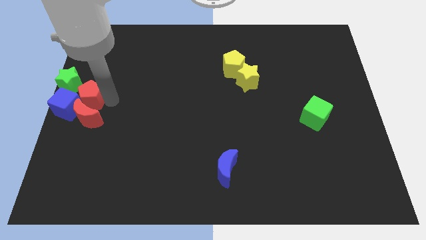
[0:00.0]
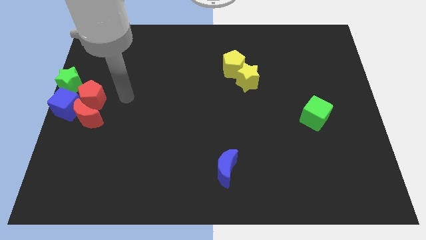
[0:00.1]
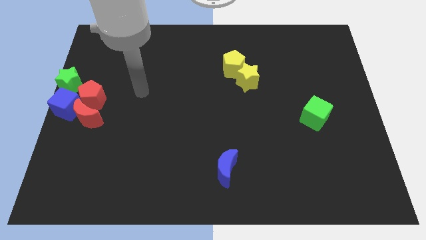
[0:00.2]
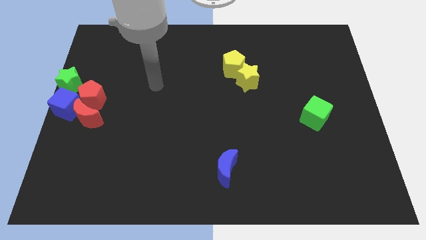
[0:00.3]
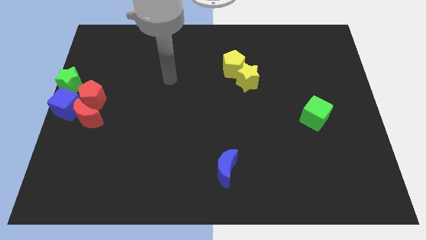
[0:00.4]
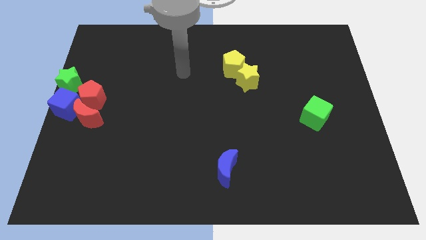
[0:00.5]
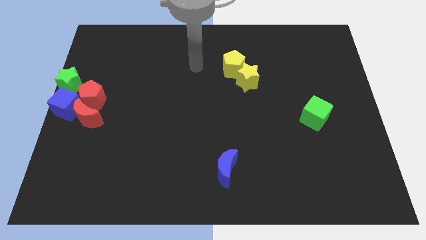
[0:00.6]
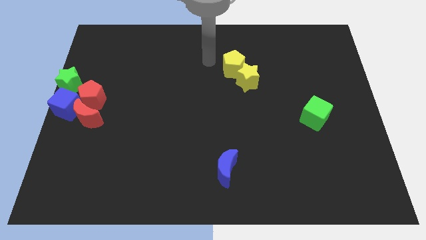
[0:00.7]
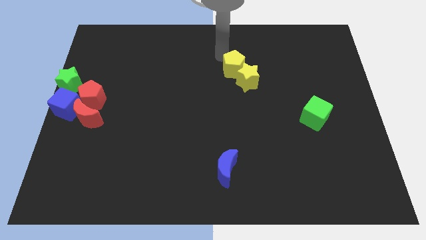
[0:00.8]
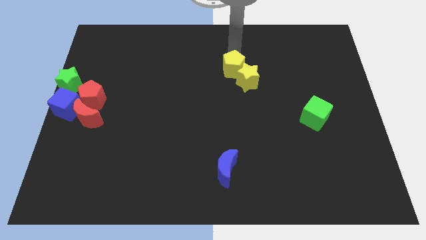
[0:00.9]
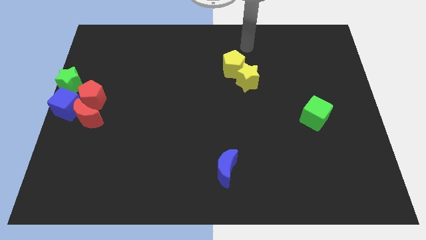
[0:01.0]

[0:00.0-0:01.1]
place your arm to the top of yellow pentagon

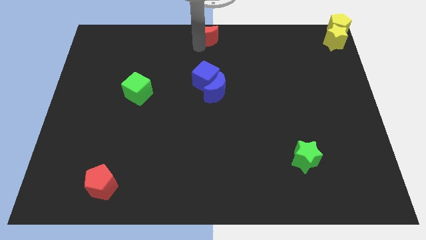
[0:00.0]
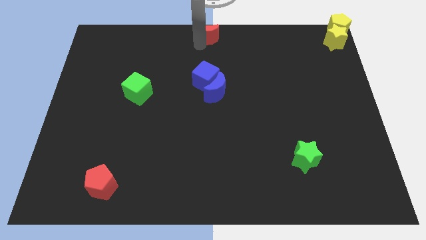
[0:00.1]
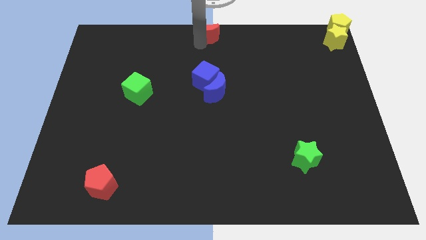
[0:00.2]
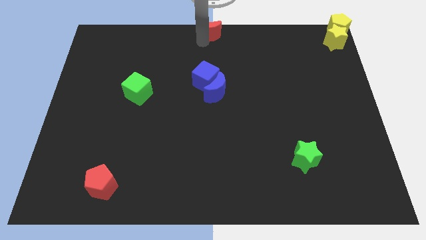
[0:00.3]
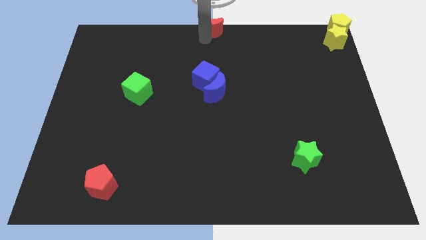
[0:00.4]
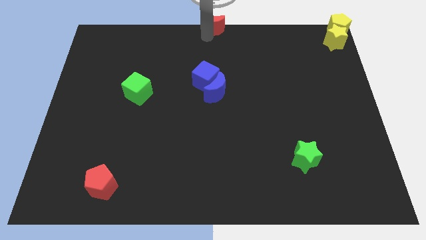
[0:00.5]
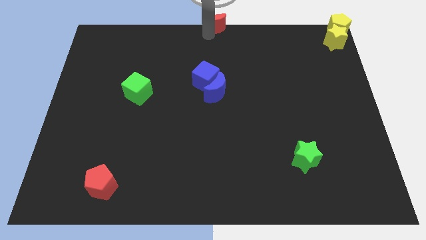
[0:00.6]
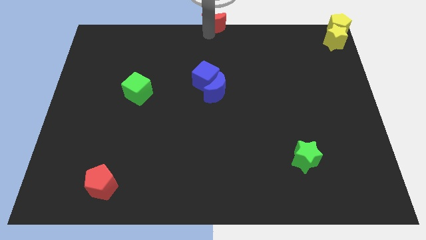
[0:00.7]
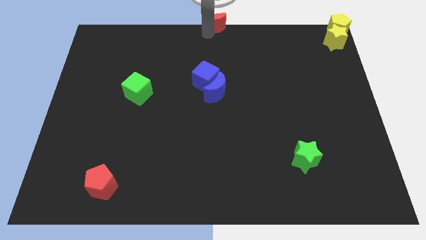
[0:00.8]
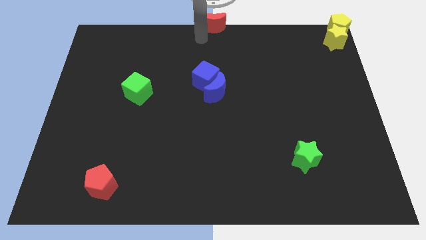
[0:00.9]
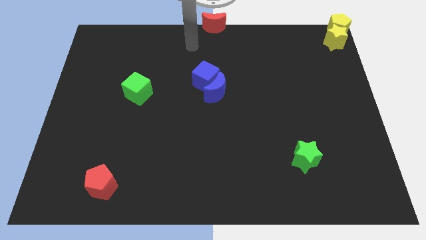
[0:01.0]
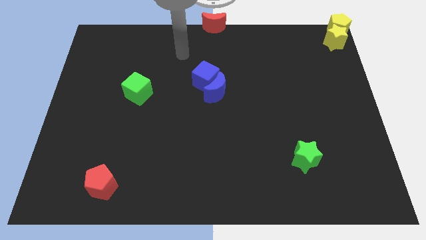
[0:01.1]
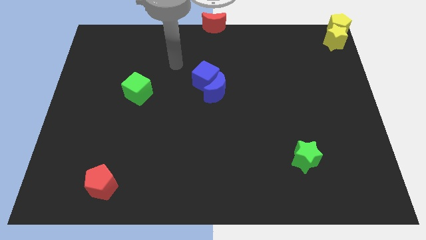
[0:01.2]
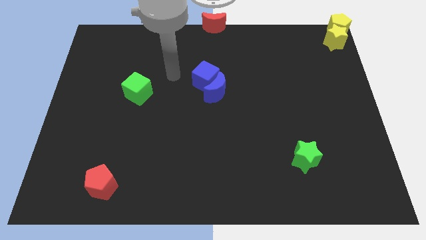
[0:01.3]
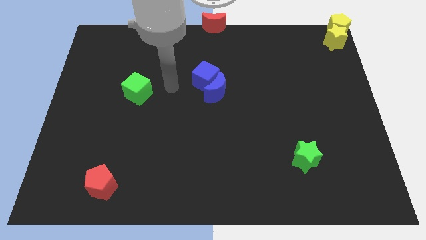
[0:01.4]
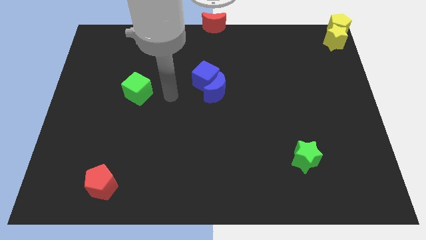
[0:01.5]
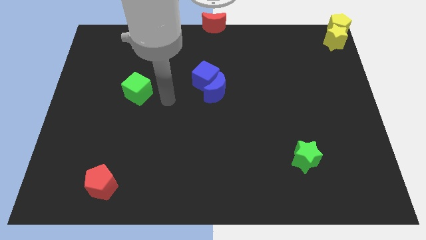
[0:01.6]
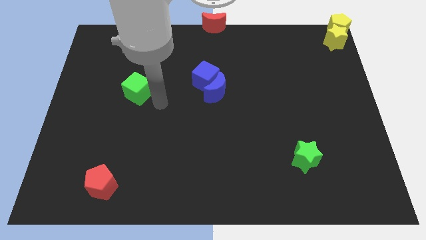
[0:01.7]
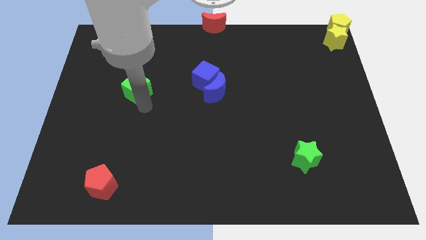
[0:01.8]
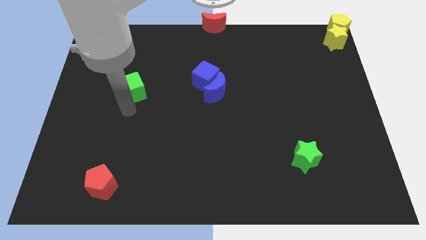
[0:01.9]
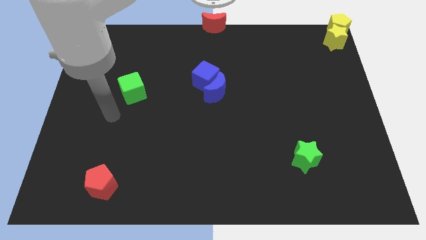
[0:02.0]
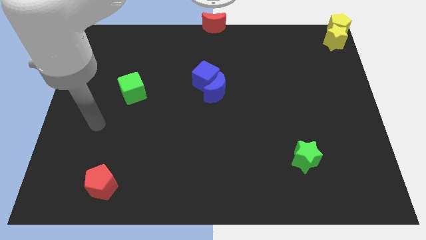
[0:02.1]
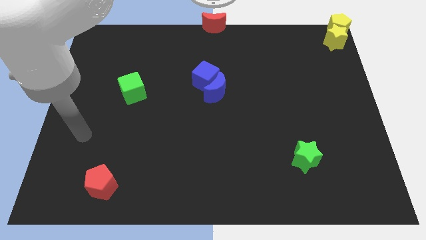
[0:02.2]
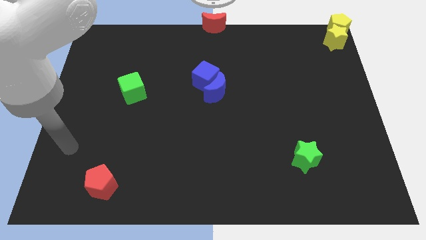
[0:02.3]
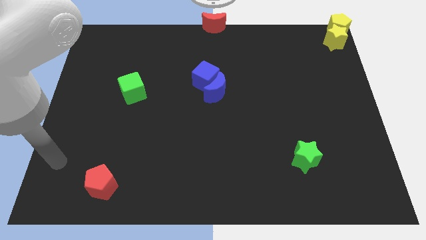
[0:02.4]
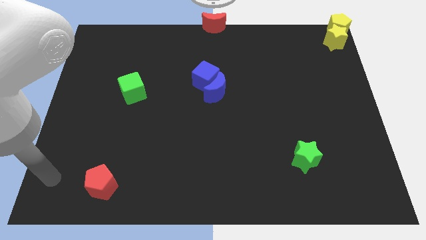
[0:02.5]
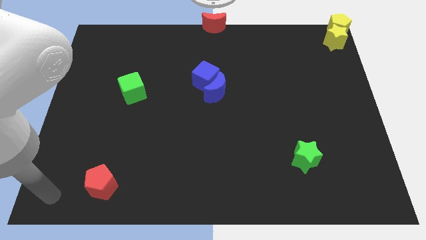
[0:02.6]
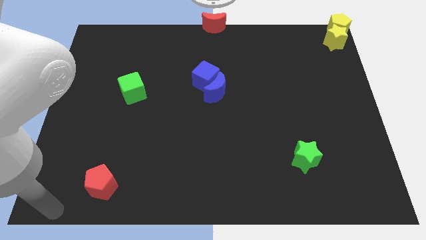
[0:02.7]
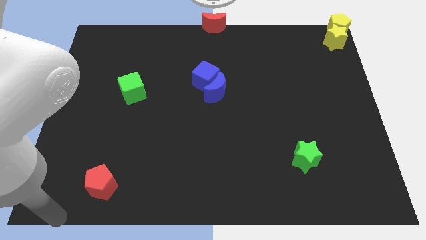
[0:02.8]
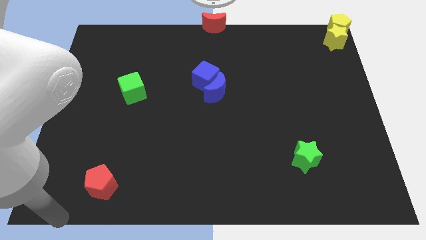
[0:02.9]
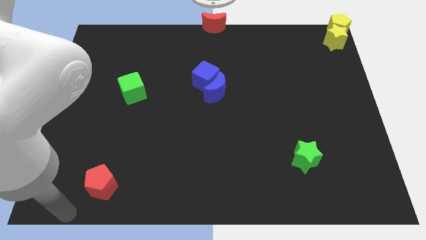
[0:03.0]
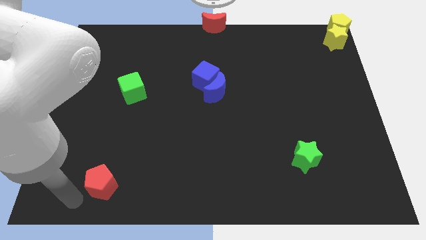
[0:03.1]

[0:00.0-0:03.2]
move your arm to the bottom left of the red pentagon

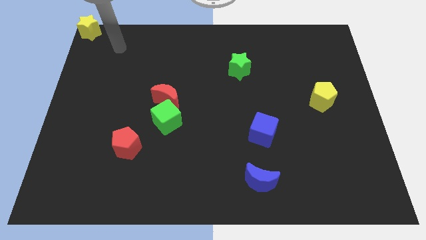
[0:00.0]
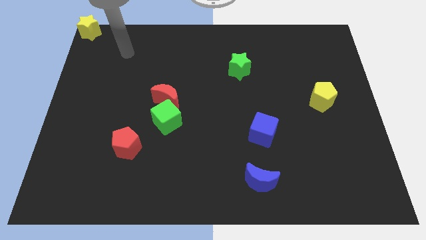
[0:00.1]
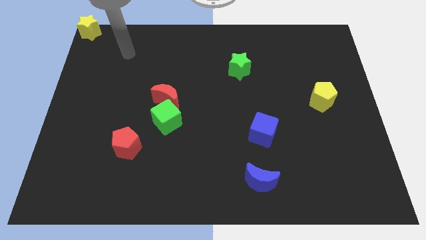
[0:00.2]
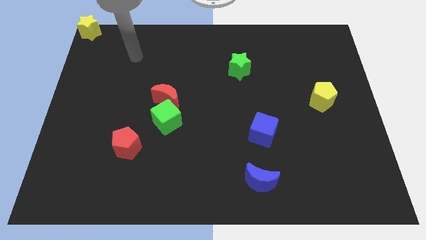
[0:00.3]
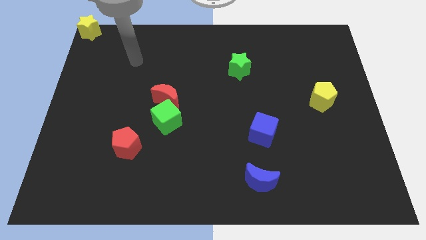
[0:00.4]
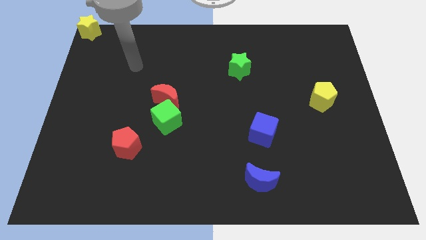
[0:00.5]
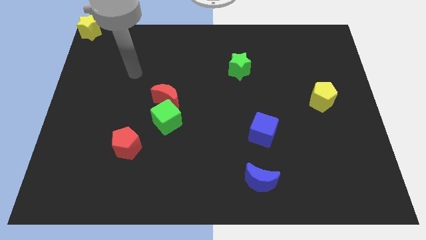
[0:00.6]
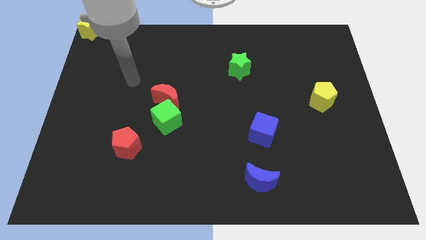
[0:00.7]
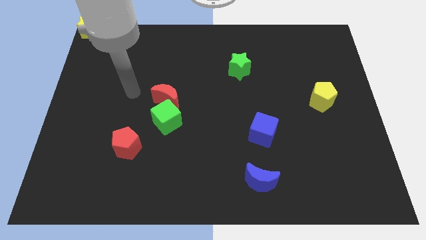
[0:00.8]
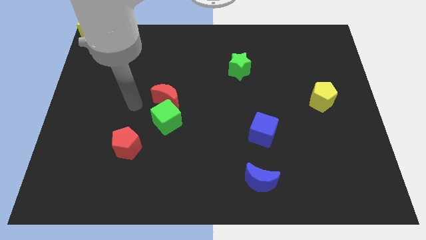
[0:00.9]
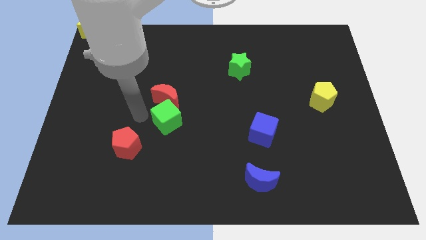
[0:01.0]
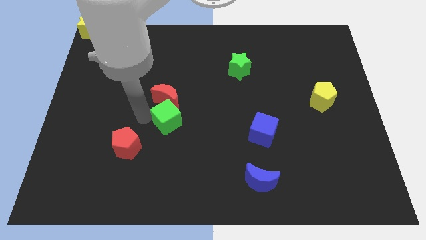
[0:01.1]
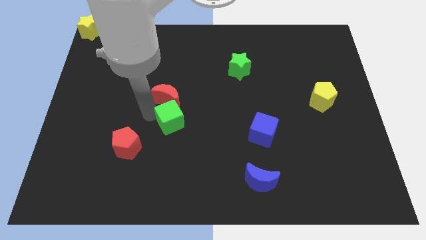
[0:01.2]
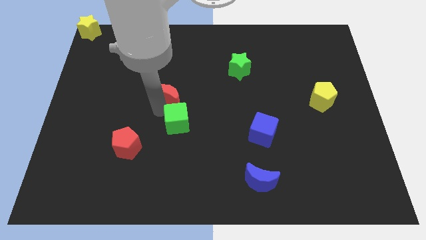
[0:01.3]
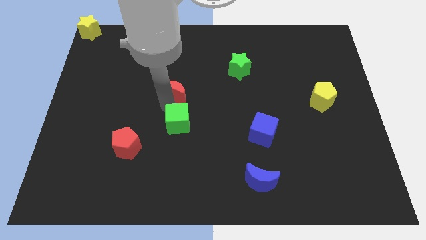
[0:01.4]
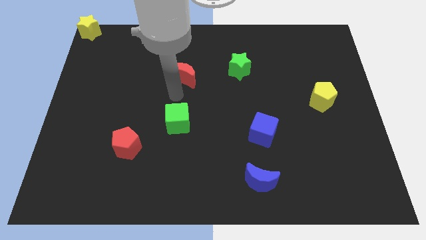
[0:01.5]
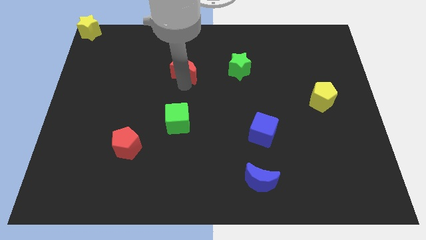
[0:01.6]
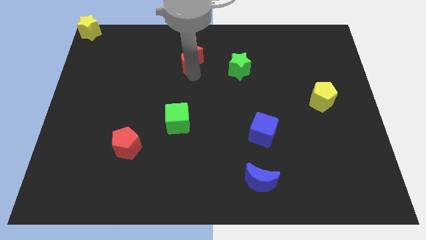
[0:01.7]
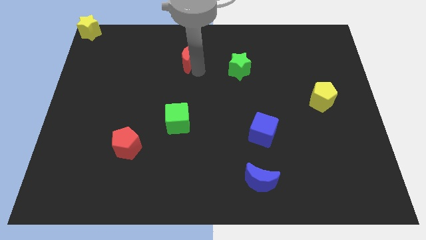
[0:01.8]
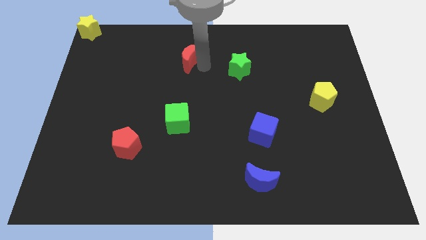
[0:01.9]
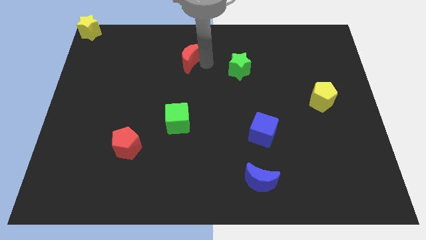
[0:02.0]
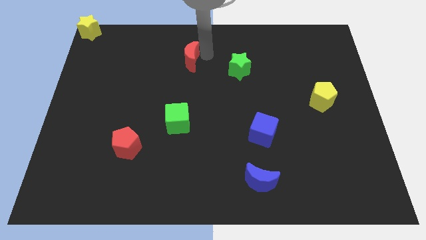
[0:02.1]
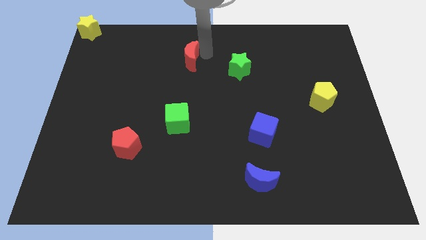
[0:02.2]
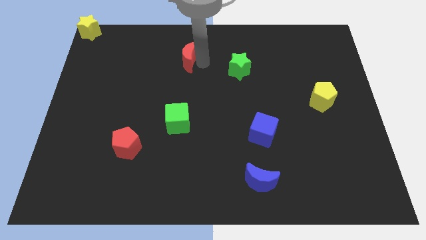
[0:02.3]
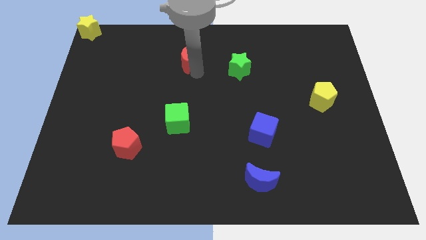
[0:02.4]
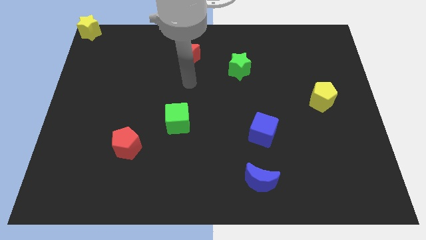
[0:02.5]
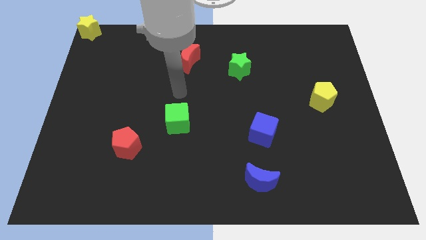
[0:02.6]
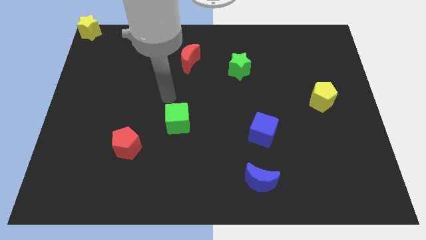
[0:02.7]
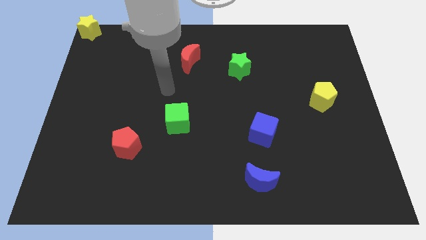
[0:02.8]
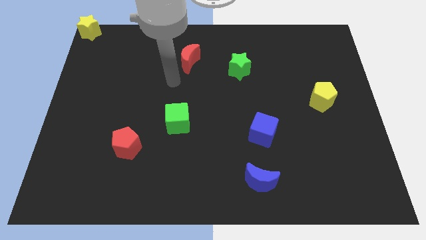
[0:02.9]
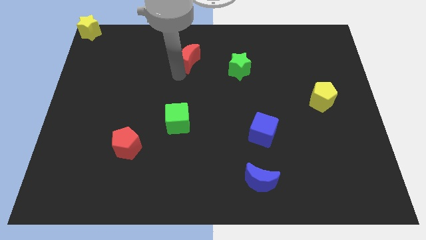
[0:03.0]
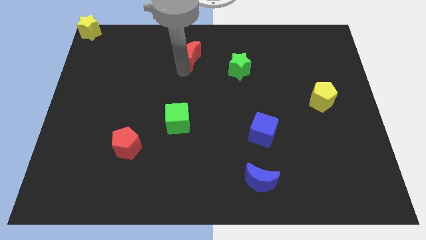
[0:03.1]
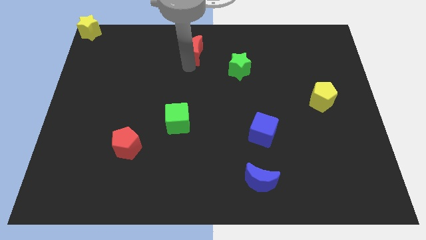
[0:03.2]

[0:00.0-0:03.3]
separate the red moon from the green cube

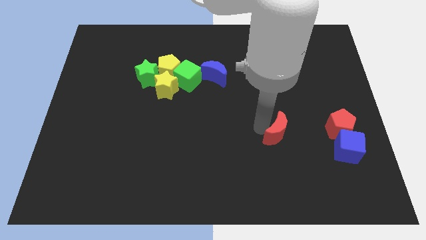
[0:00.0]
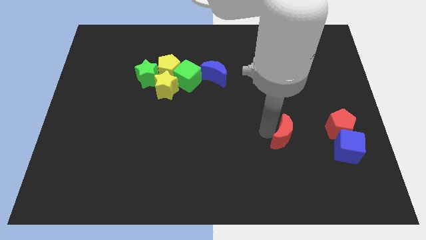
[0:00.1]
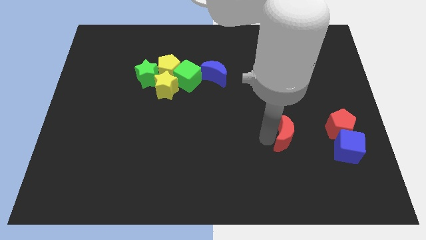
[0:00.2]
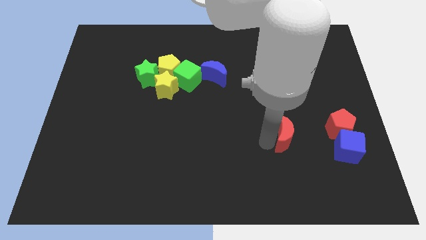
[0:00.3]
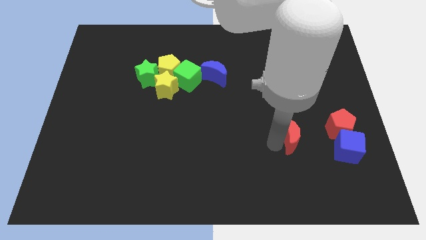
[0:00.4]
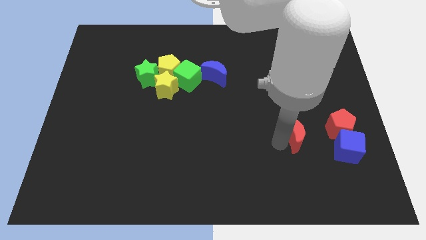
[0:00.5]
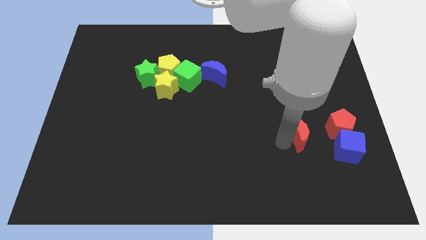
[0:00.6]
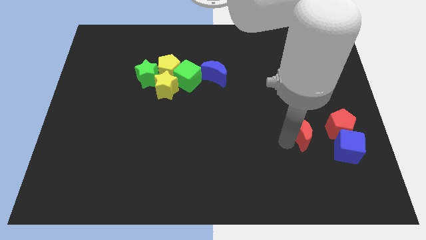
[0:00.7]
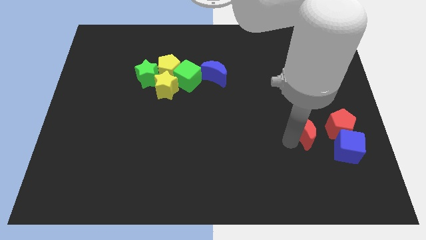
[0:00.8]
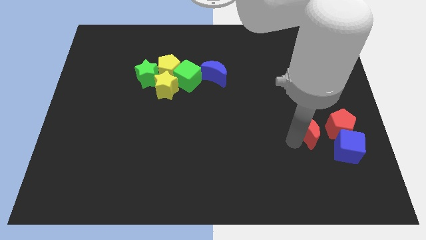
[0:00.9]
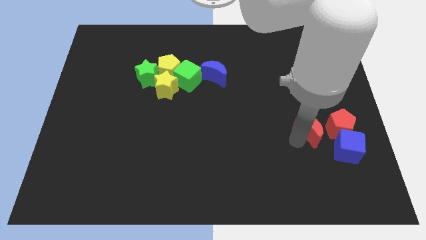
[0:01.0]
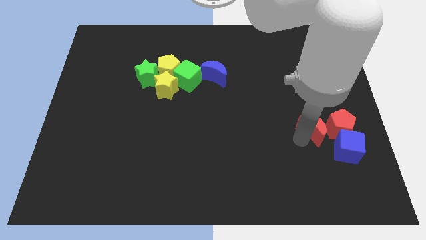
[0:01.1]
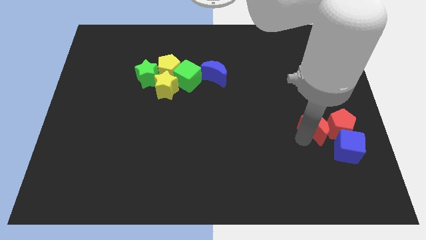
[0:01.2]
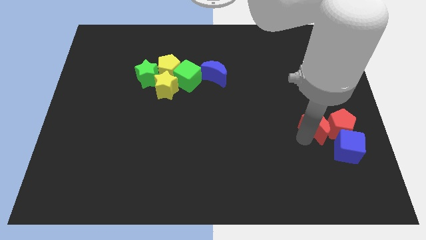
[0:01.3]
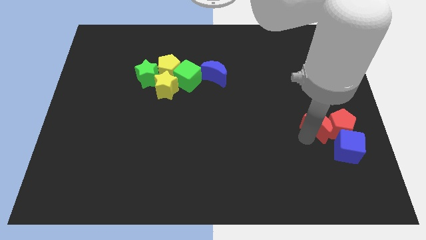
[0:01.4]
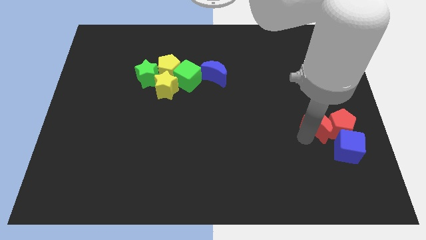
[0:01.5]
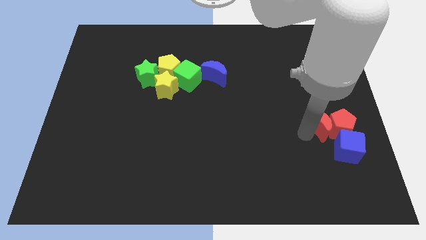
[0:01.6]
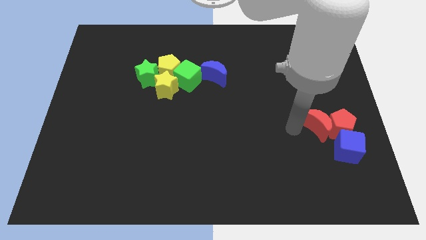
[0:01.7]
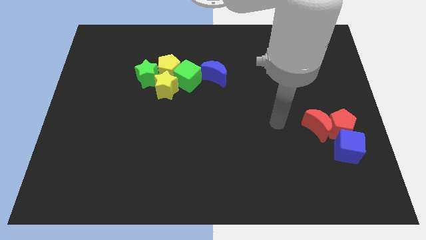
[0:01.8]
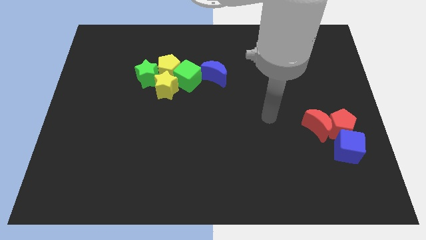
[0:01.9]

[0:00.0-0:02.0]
put the red crescent at the left side of the red pentagon
